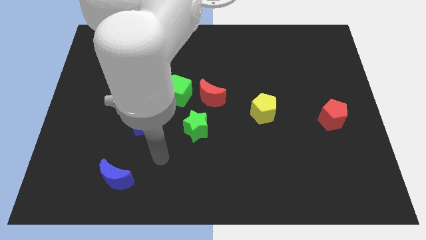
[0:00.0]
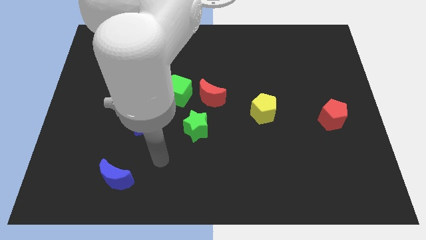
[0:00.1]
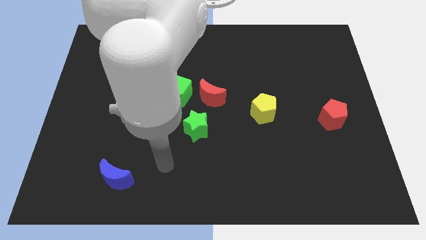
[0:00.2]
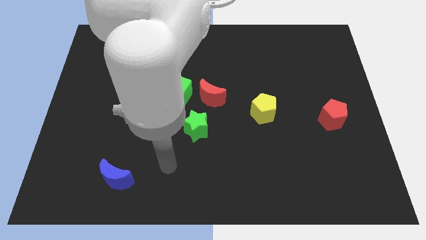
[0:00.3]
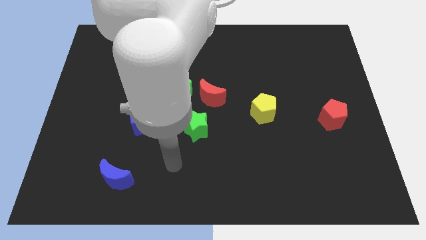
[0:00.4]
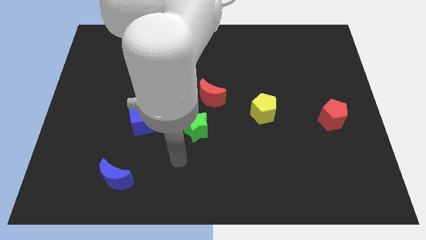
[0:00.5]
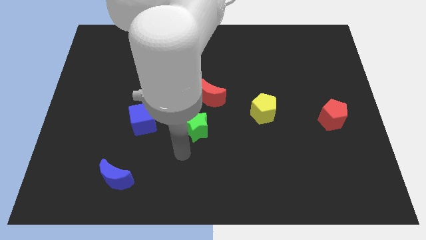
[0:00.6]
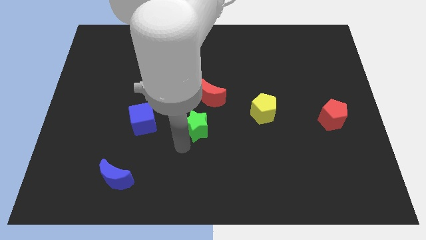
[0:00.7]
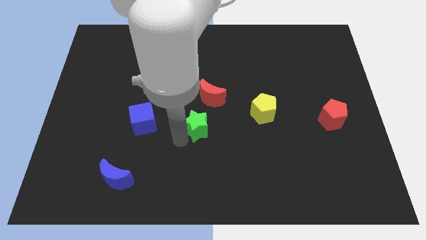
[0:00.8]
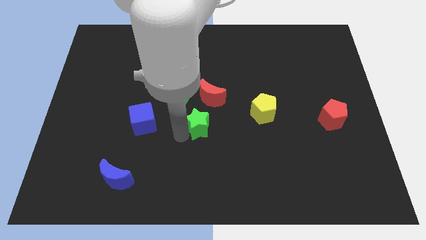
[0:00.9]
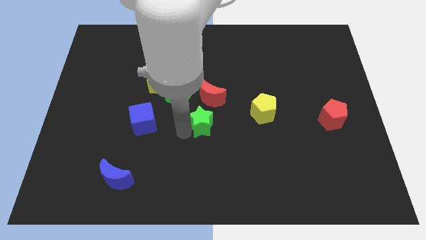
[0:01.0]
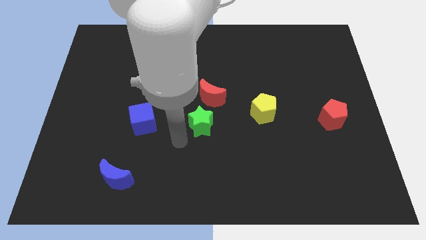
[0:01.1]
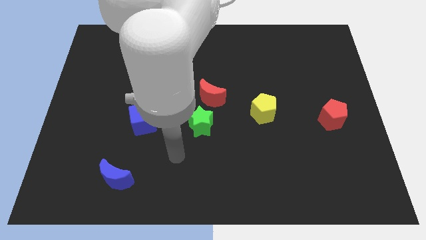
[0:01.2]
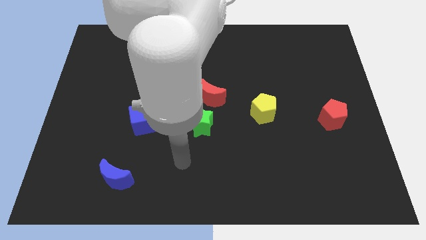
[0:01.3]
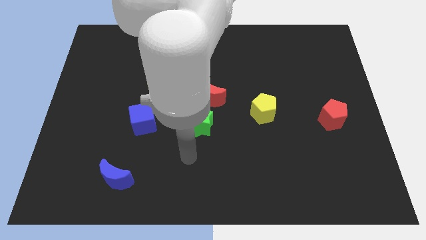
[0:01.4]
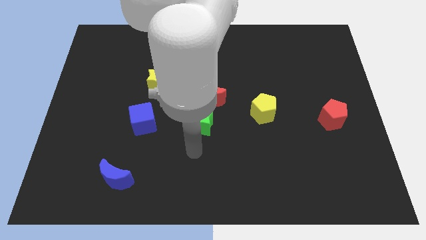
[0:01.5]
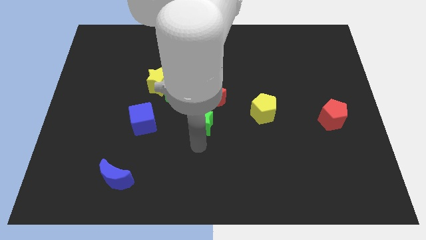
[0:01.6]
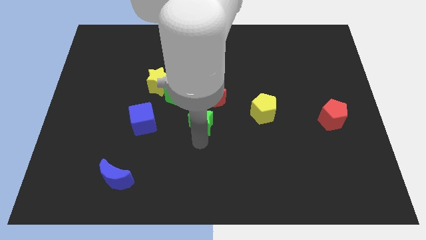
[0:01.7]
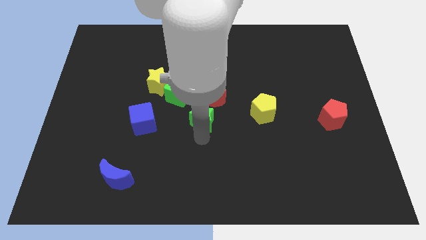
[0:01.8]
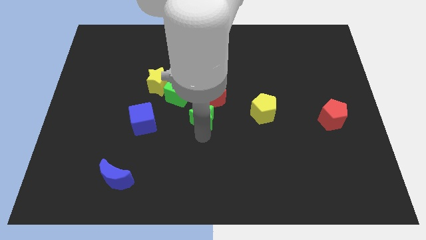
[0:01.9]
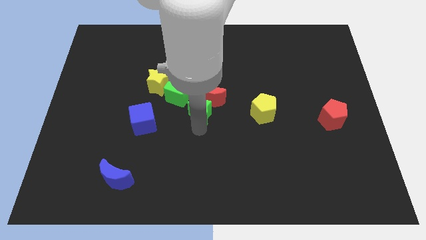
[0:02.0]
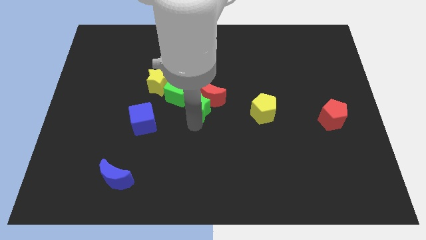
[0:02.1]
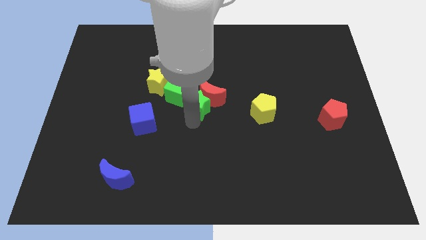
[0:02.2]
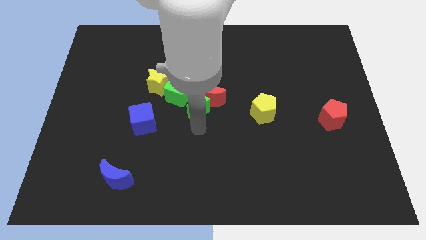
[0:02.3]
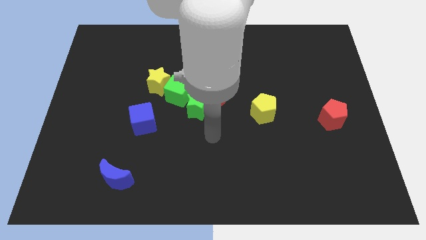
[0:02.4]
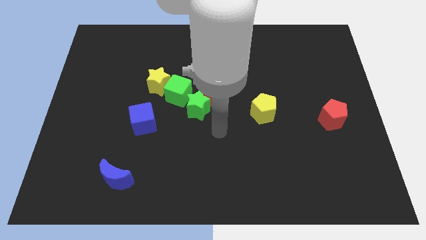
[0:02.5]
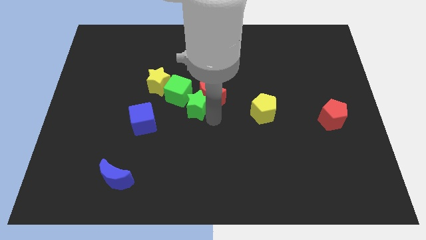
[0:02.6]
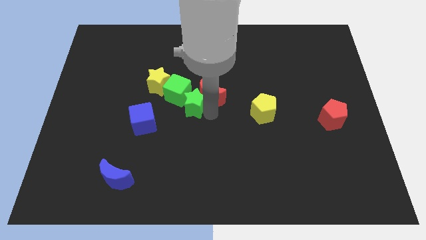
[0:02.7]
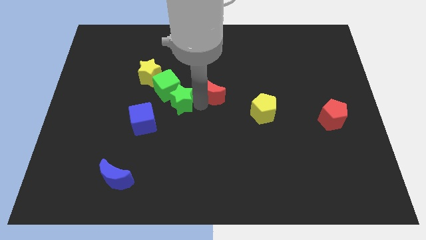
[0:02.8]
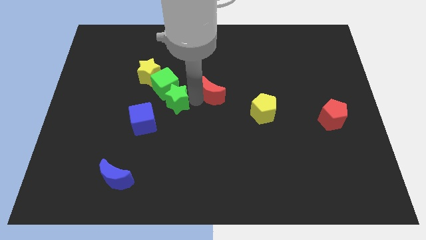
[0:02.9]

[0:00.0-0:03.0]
push the green star into the green cube

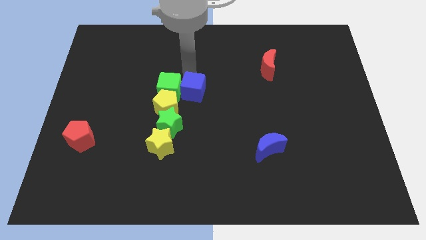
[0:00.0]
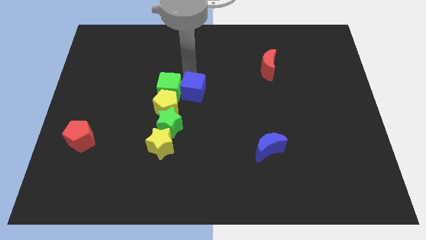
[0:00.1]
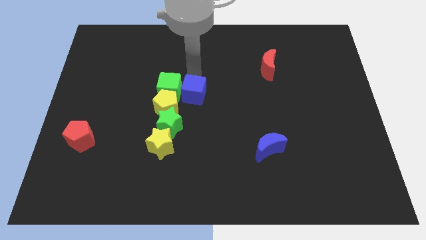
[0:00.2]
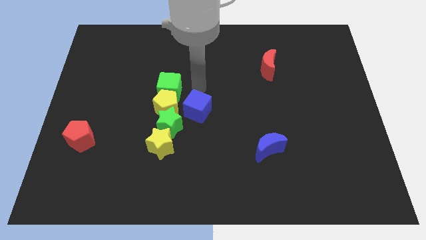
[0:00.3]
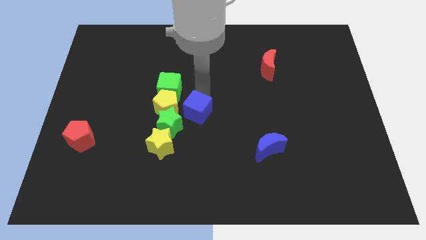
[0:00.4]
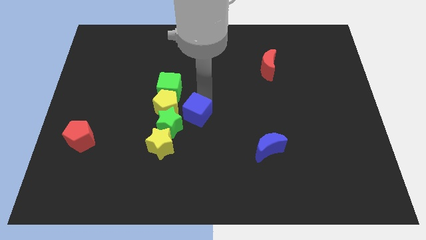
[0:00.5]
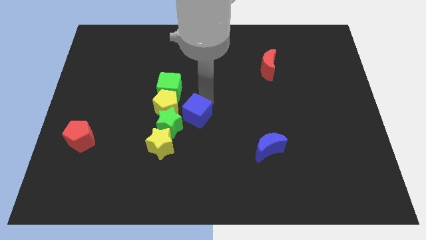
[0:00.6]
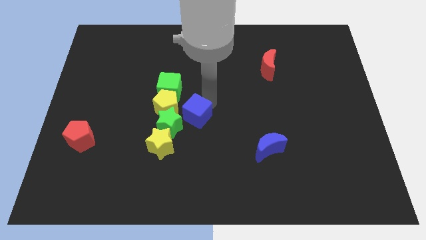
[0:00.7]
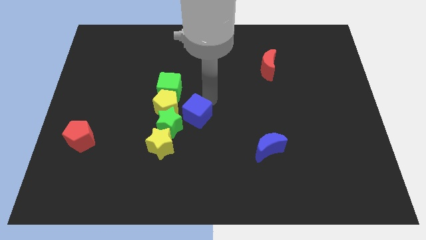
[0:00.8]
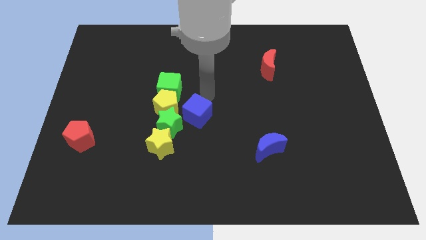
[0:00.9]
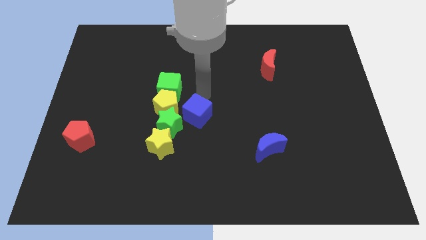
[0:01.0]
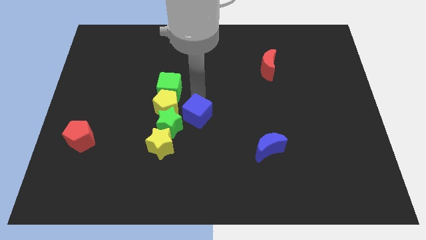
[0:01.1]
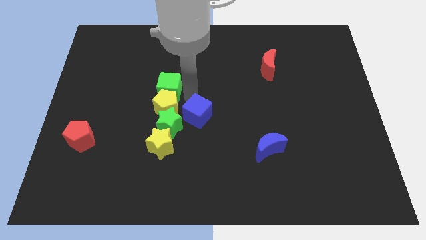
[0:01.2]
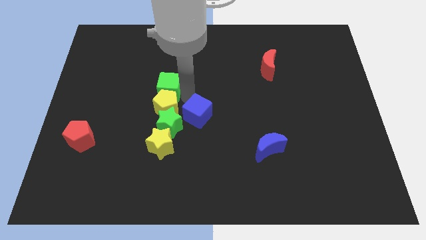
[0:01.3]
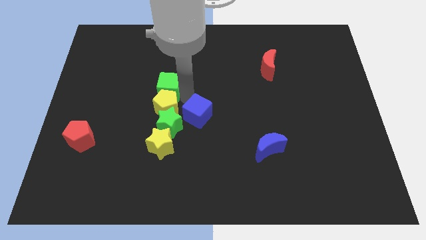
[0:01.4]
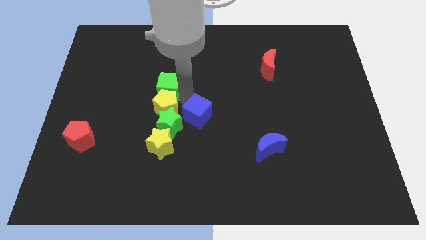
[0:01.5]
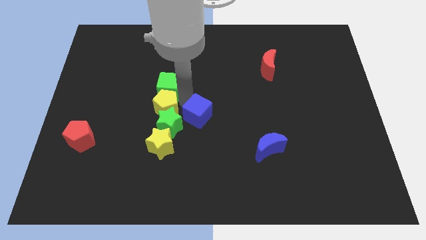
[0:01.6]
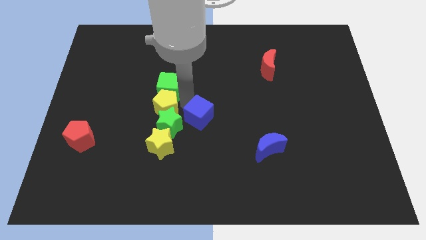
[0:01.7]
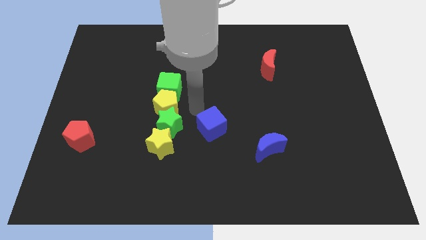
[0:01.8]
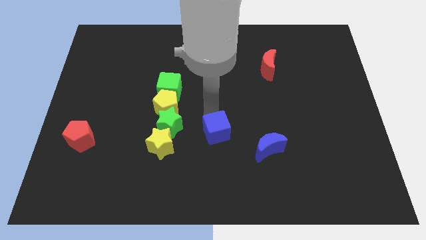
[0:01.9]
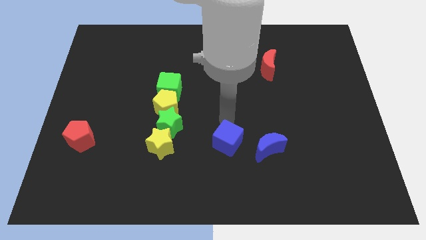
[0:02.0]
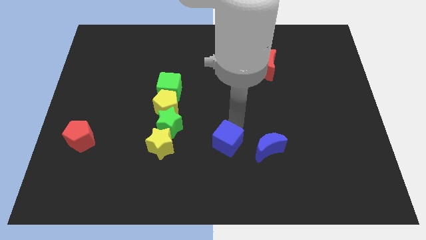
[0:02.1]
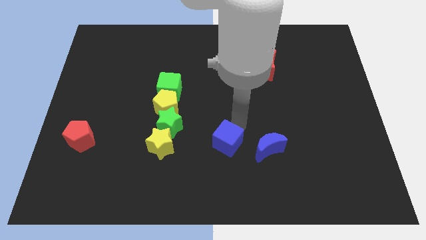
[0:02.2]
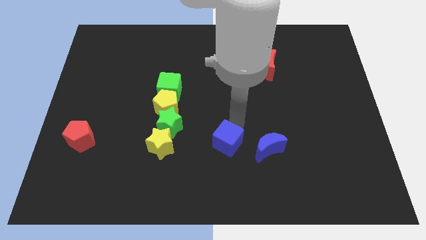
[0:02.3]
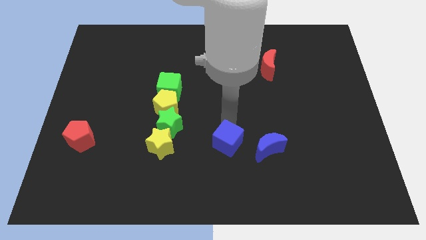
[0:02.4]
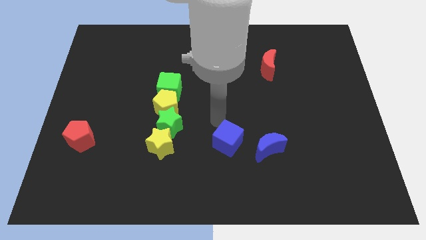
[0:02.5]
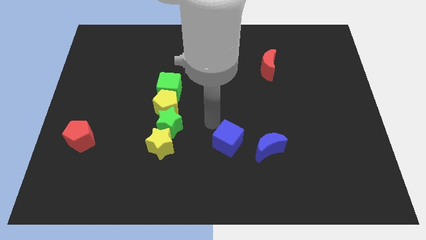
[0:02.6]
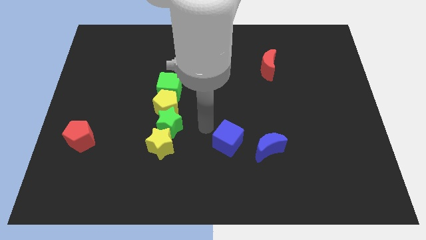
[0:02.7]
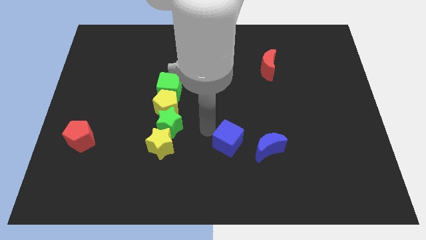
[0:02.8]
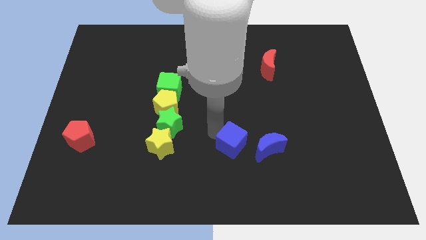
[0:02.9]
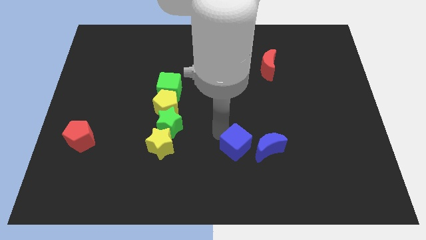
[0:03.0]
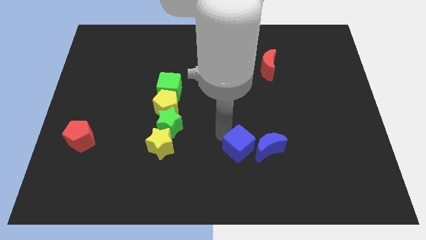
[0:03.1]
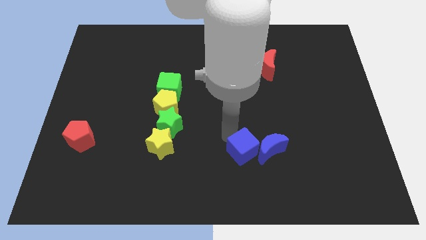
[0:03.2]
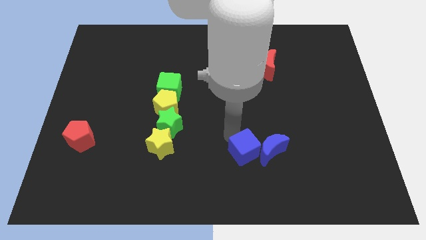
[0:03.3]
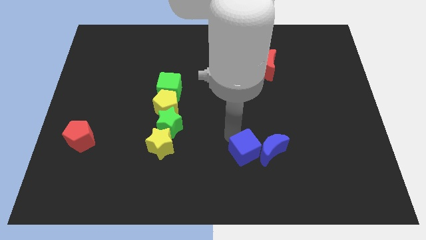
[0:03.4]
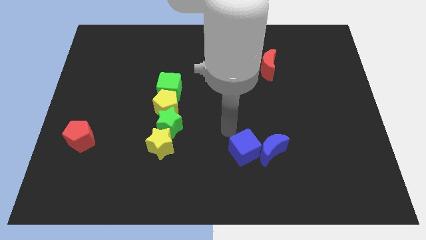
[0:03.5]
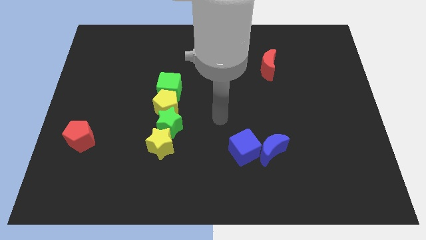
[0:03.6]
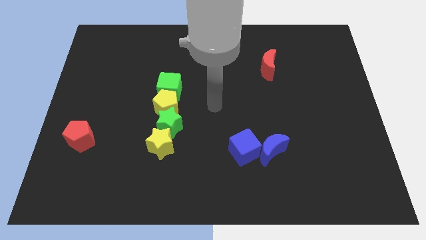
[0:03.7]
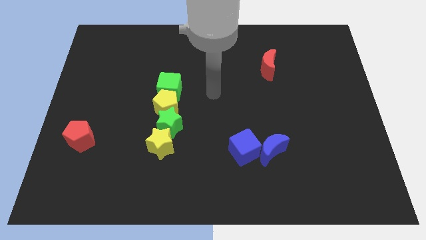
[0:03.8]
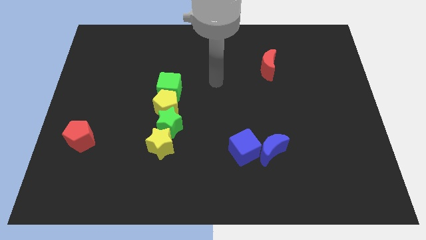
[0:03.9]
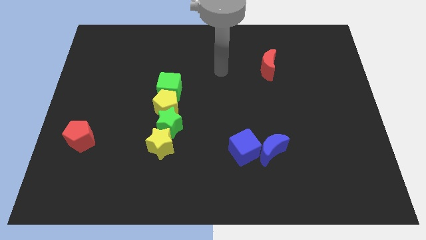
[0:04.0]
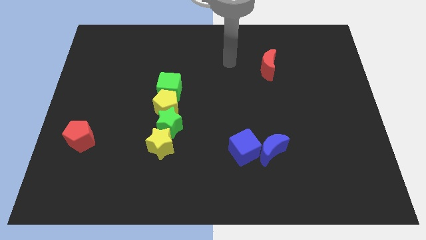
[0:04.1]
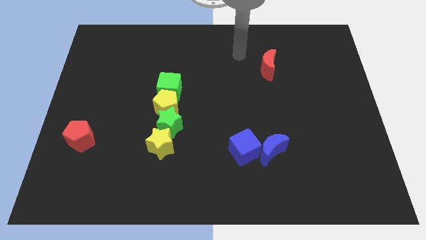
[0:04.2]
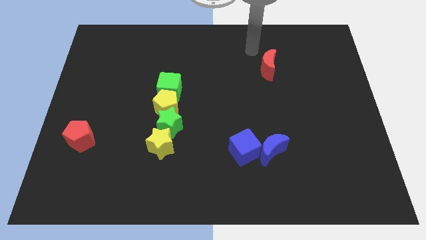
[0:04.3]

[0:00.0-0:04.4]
push the blue cube left to the blue crescent

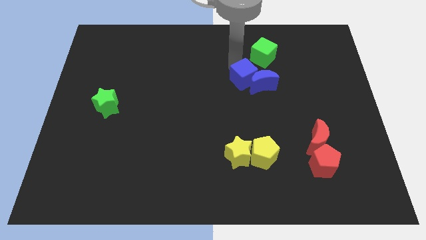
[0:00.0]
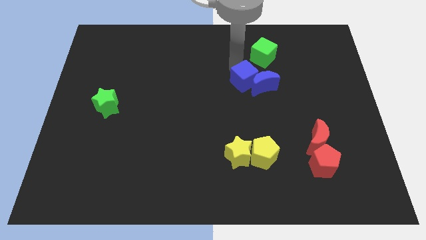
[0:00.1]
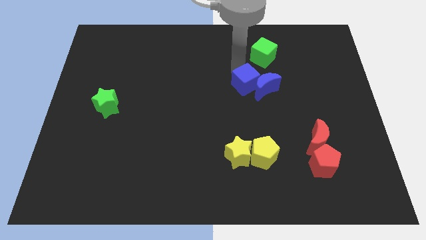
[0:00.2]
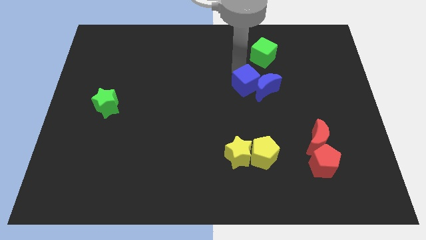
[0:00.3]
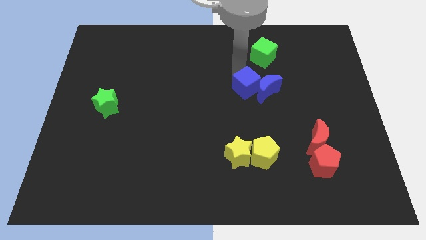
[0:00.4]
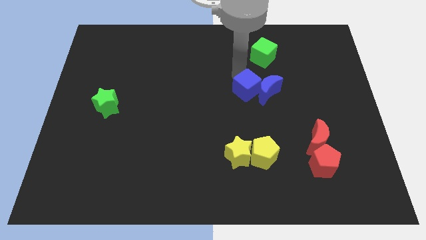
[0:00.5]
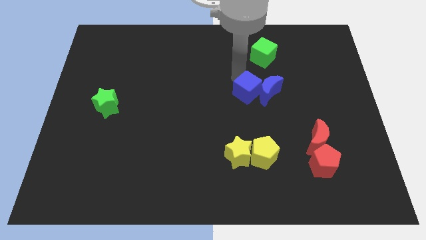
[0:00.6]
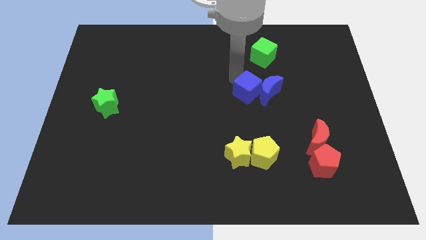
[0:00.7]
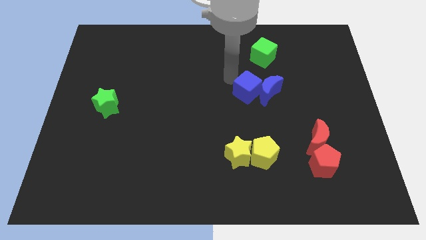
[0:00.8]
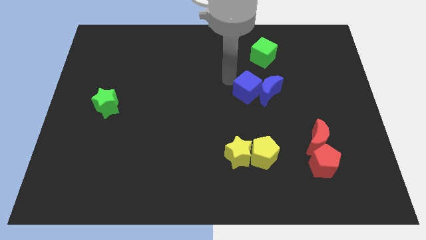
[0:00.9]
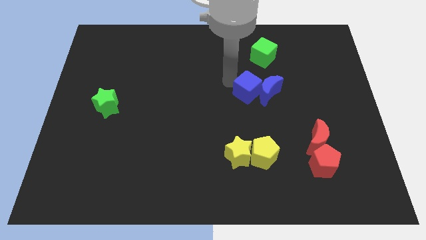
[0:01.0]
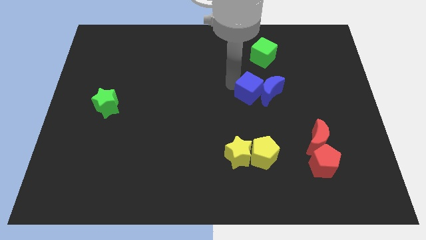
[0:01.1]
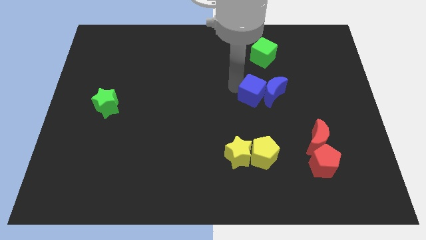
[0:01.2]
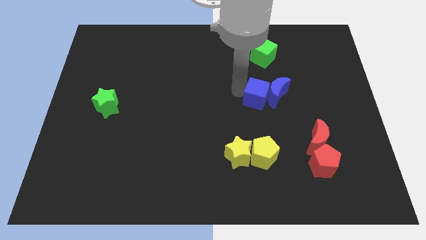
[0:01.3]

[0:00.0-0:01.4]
slightly push the blue cube towards the down side

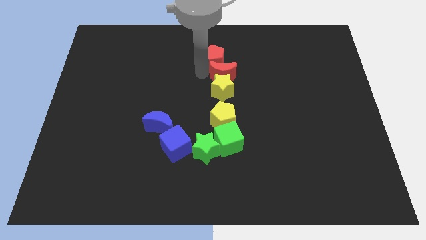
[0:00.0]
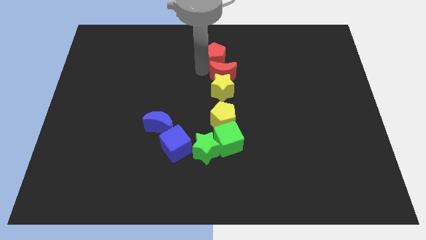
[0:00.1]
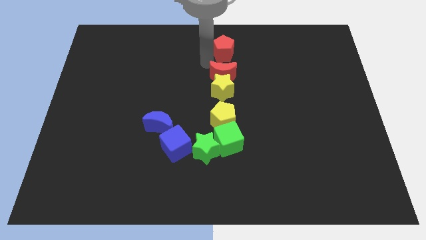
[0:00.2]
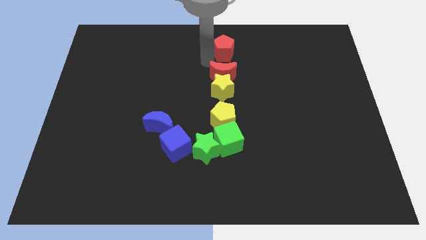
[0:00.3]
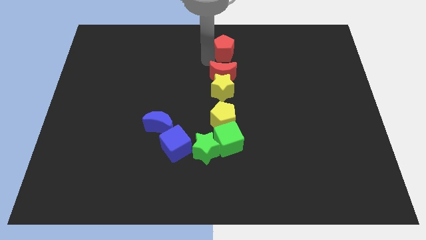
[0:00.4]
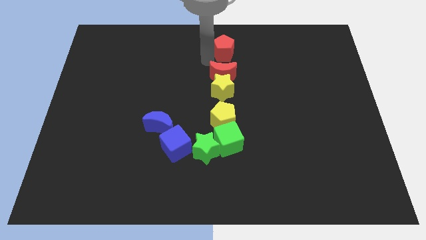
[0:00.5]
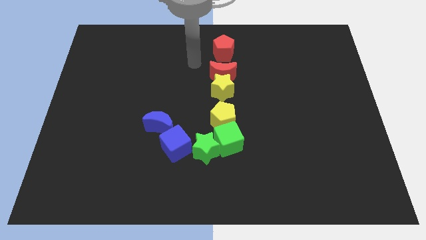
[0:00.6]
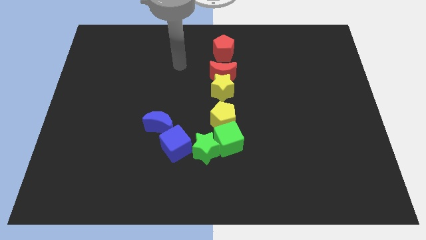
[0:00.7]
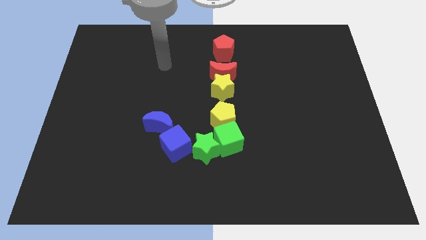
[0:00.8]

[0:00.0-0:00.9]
move the red pentagon slightly up
